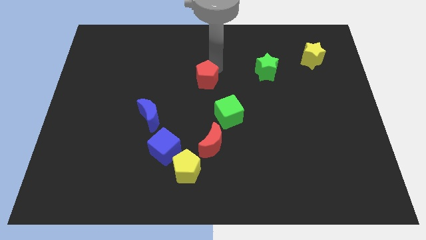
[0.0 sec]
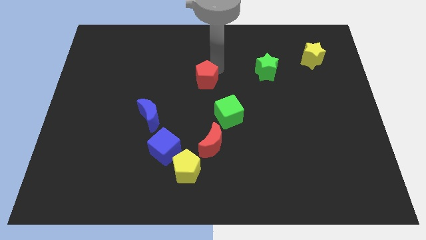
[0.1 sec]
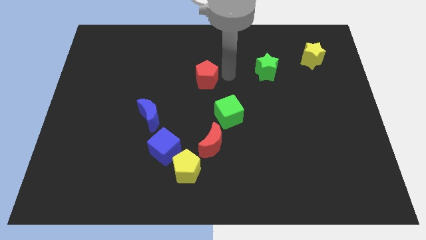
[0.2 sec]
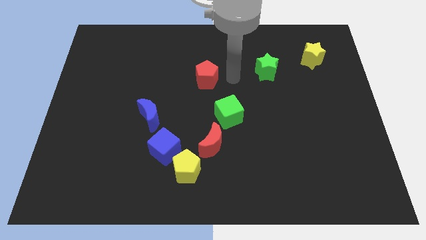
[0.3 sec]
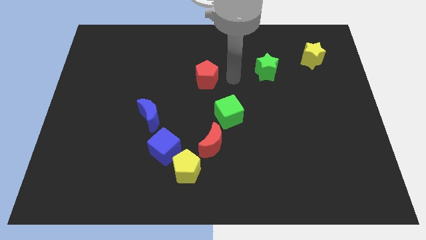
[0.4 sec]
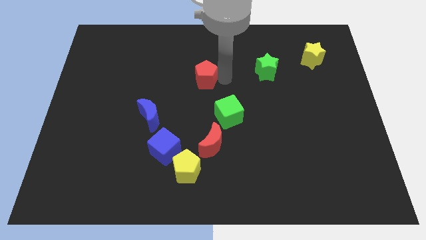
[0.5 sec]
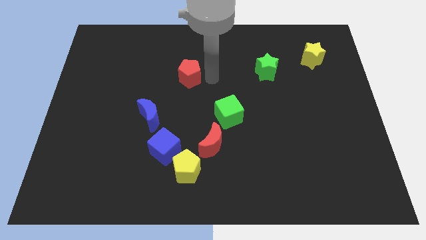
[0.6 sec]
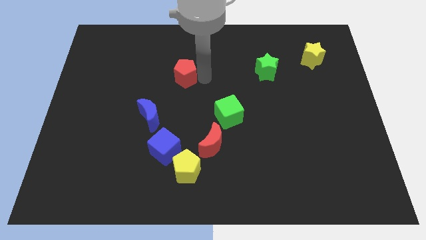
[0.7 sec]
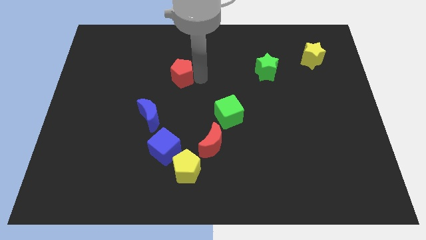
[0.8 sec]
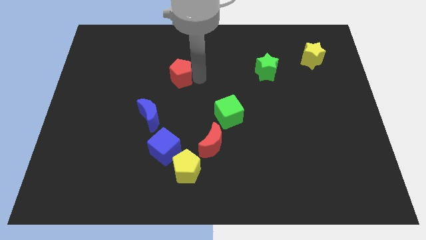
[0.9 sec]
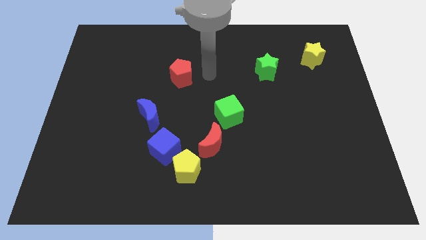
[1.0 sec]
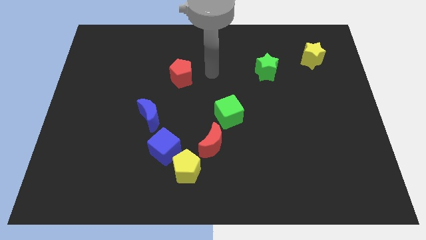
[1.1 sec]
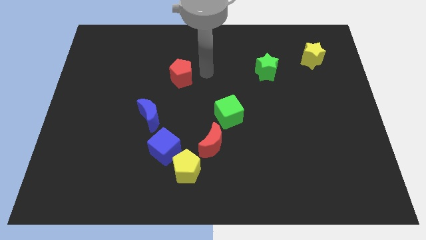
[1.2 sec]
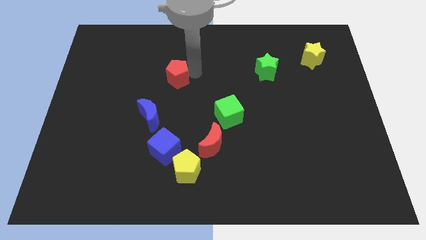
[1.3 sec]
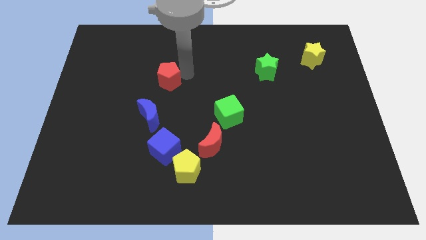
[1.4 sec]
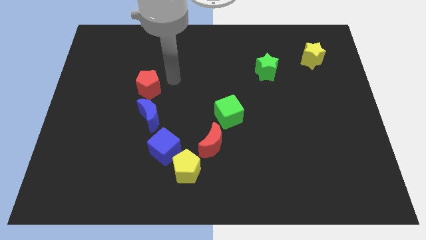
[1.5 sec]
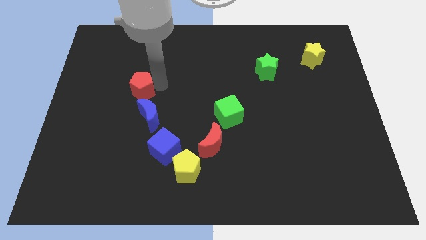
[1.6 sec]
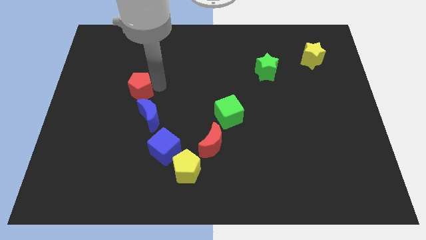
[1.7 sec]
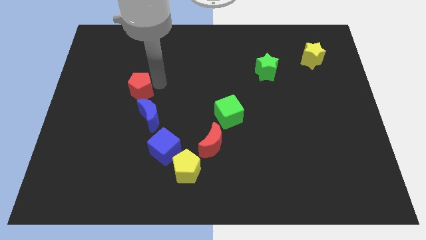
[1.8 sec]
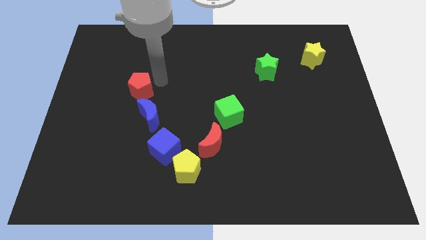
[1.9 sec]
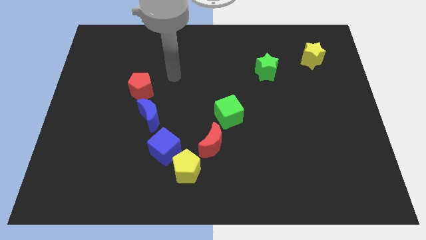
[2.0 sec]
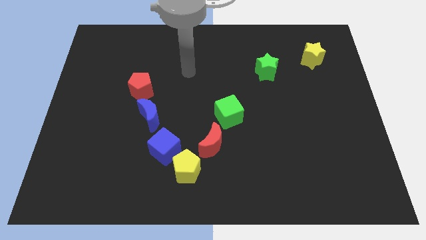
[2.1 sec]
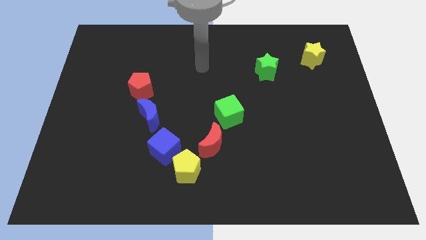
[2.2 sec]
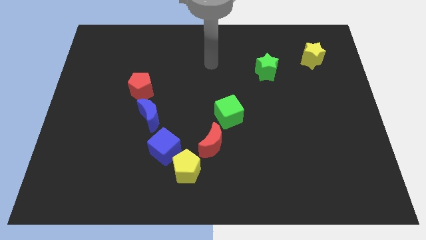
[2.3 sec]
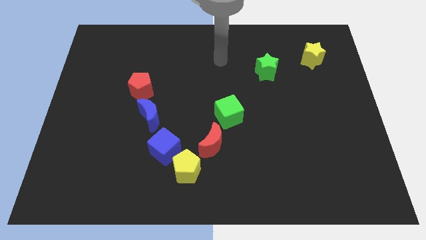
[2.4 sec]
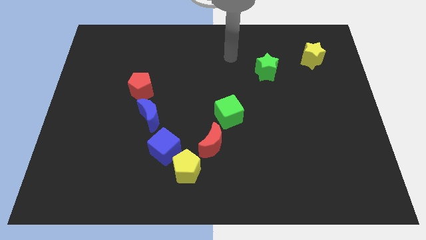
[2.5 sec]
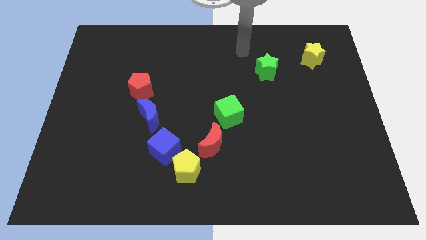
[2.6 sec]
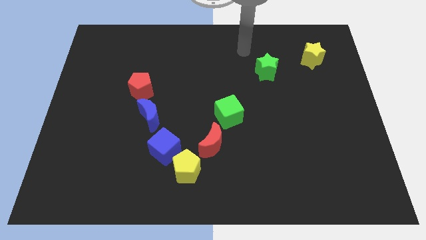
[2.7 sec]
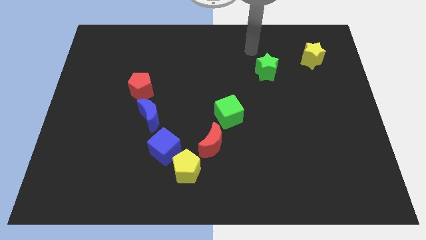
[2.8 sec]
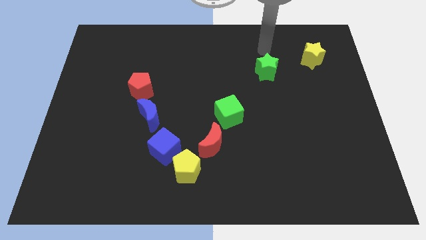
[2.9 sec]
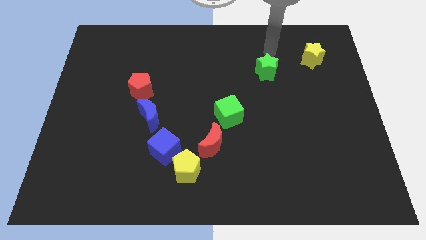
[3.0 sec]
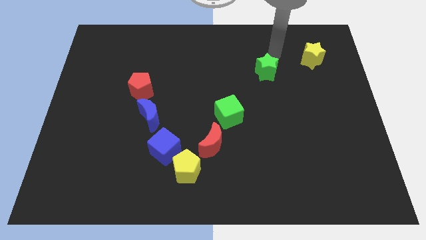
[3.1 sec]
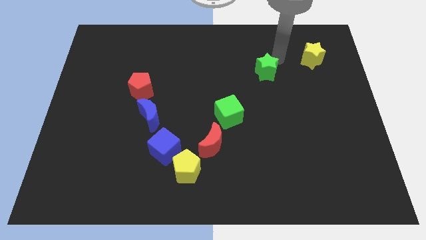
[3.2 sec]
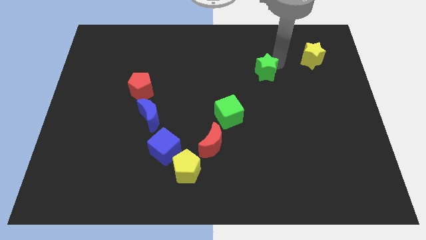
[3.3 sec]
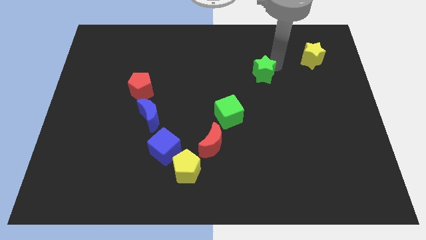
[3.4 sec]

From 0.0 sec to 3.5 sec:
move the red pentagon diagonally to the blue moon

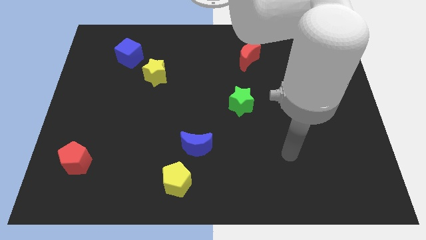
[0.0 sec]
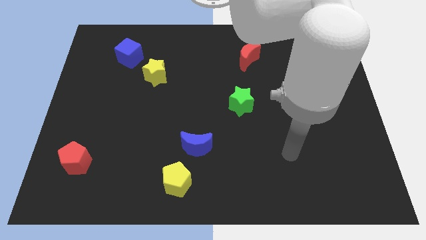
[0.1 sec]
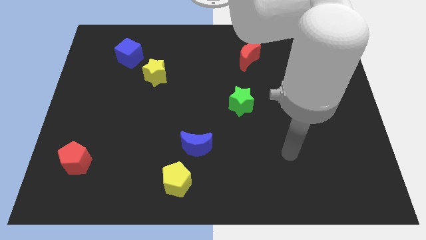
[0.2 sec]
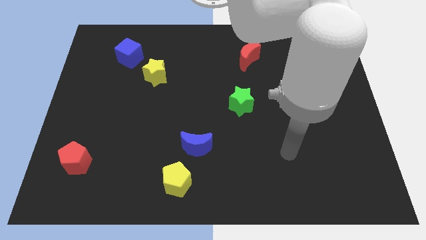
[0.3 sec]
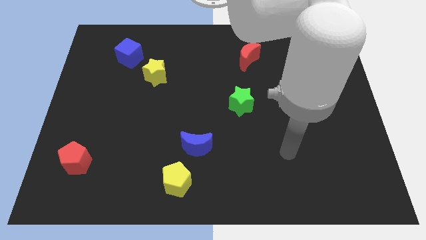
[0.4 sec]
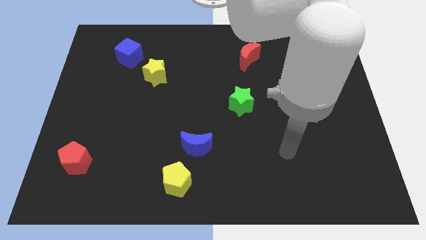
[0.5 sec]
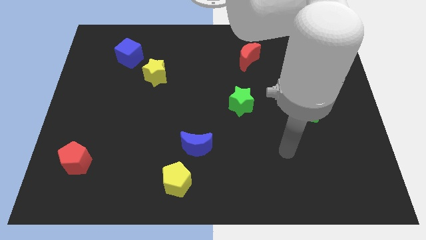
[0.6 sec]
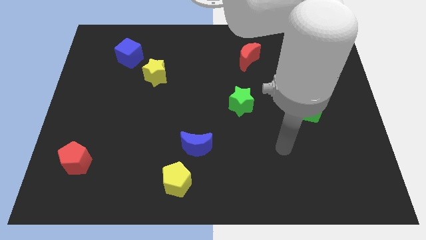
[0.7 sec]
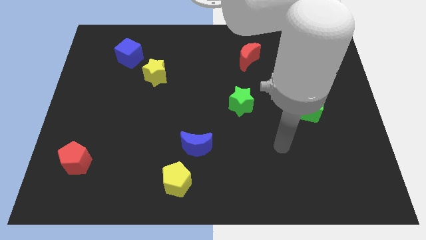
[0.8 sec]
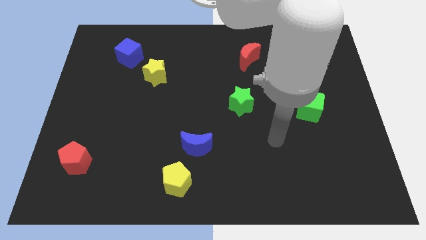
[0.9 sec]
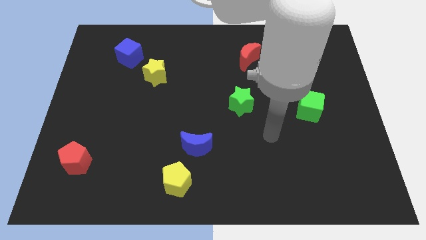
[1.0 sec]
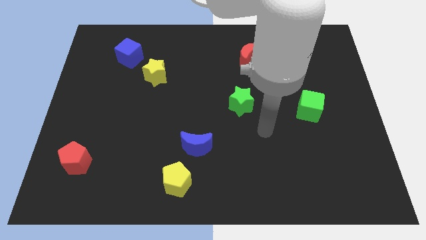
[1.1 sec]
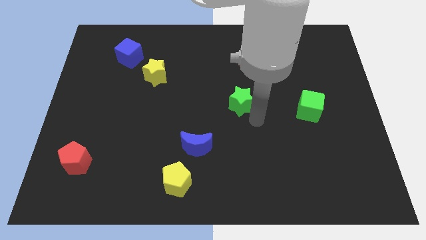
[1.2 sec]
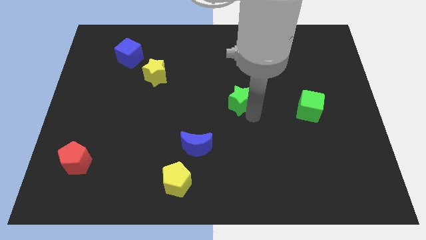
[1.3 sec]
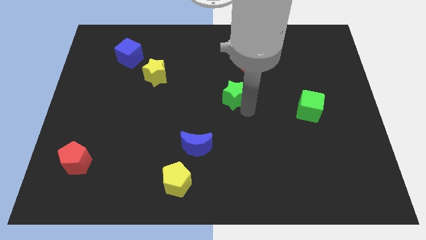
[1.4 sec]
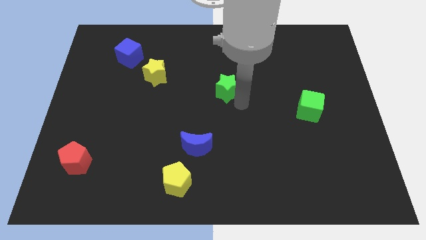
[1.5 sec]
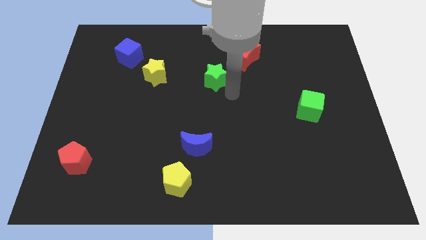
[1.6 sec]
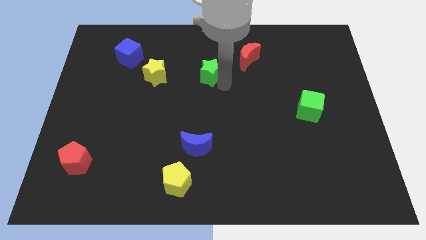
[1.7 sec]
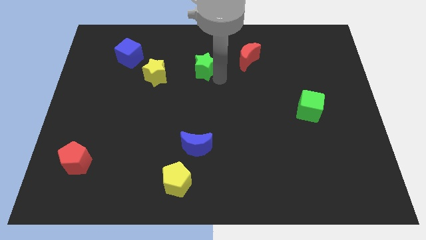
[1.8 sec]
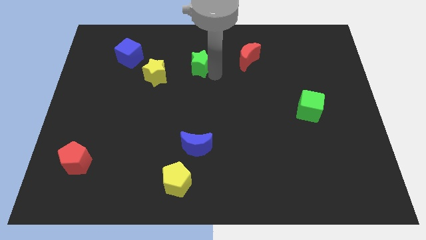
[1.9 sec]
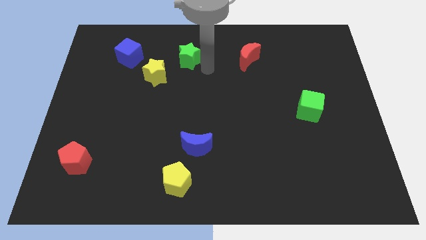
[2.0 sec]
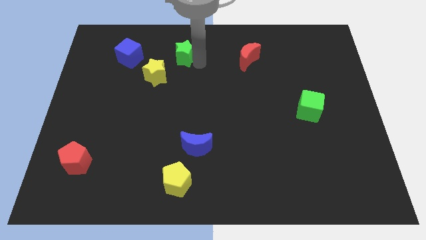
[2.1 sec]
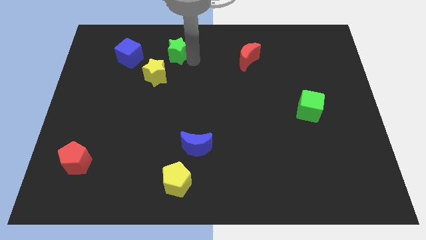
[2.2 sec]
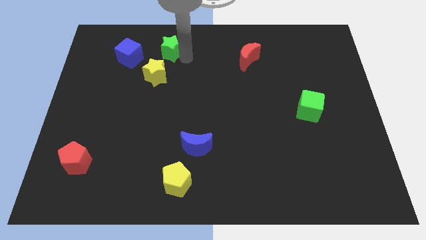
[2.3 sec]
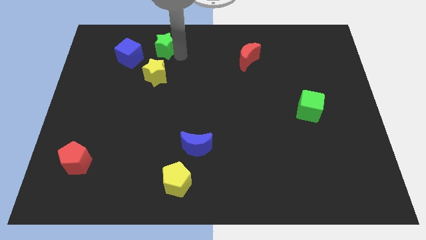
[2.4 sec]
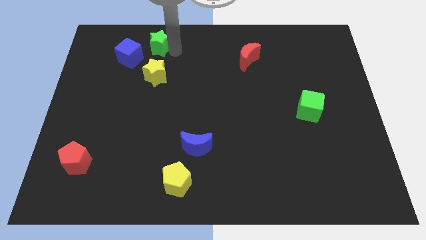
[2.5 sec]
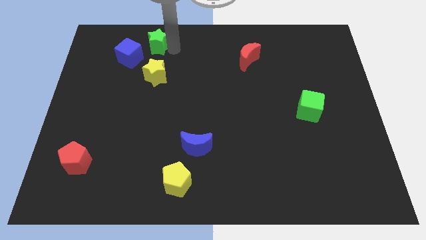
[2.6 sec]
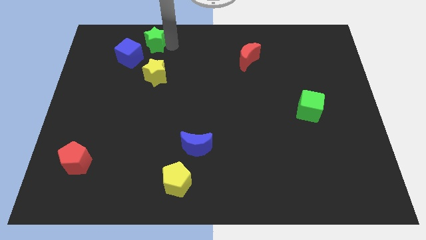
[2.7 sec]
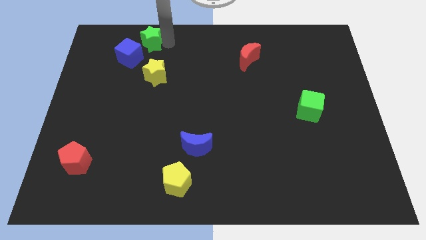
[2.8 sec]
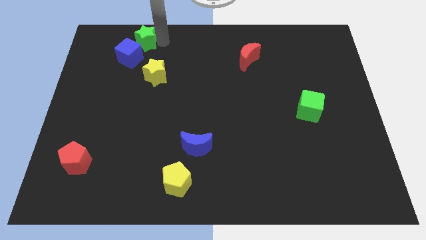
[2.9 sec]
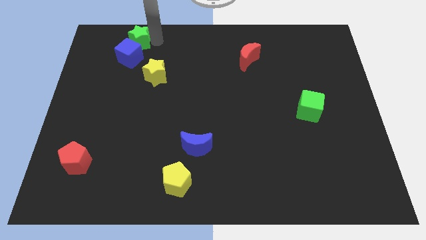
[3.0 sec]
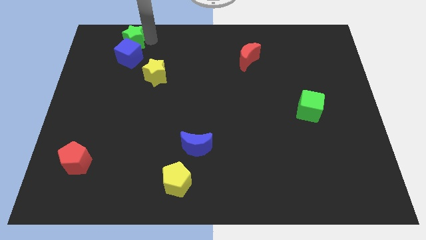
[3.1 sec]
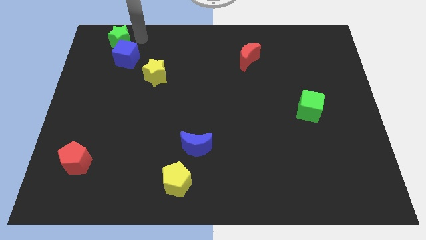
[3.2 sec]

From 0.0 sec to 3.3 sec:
push the green star into the blue cube

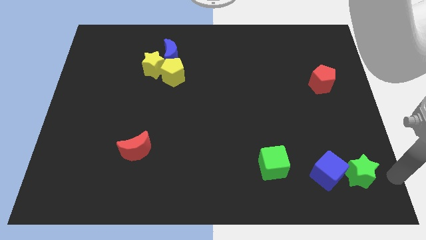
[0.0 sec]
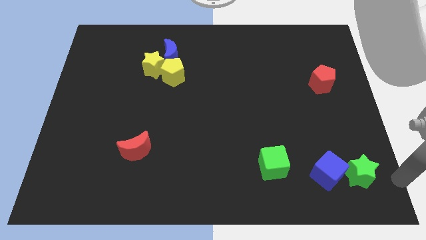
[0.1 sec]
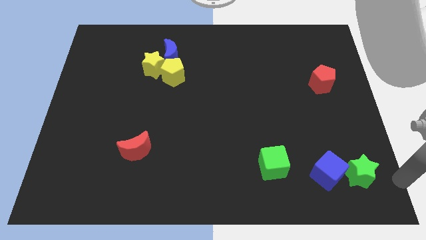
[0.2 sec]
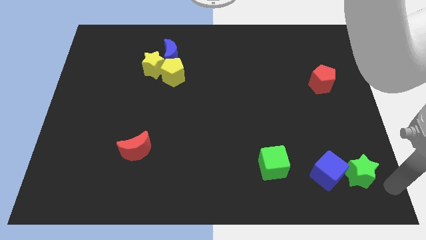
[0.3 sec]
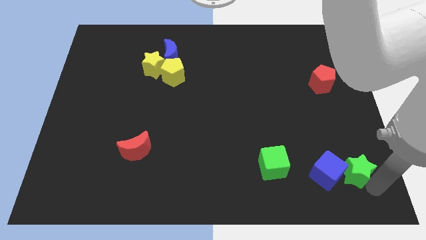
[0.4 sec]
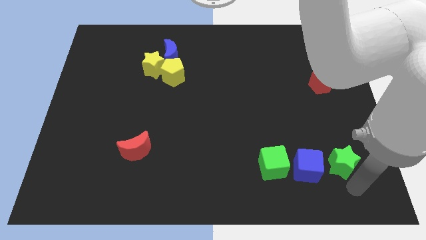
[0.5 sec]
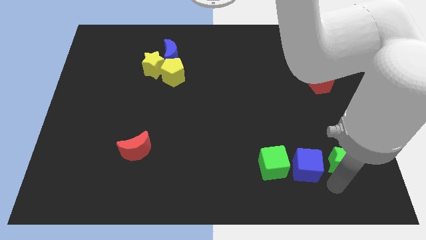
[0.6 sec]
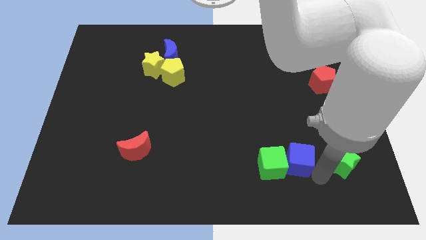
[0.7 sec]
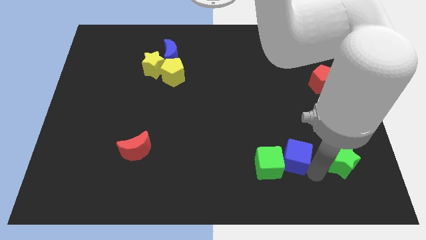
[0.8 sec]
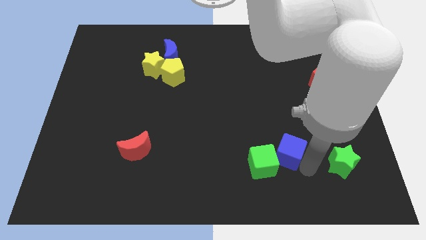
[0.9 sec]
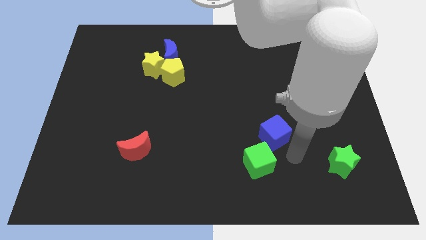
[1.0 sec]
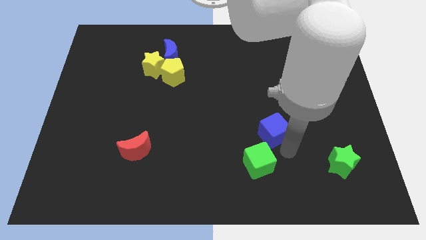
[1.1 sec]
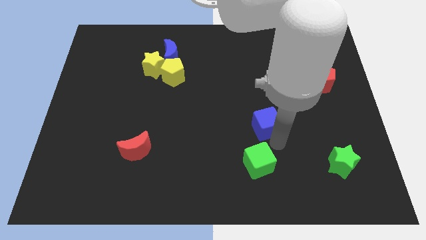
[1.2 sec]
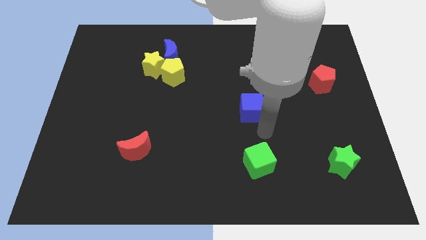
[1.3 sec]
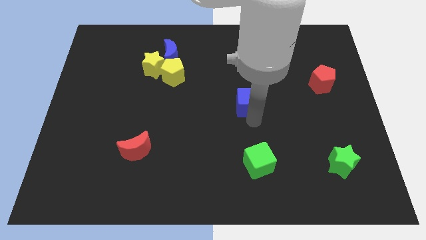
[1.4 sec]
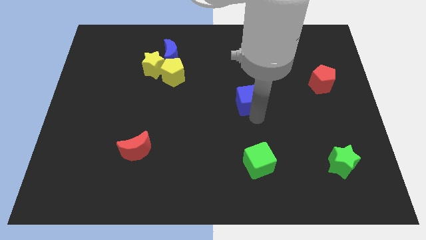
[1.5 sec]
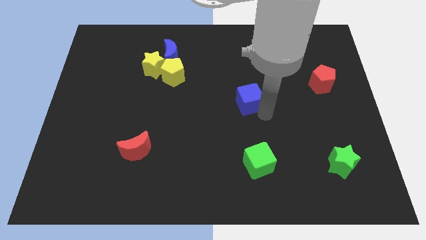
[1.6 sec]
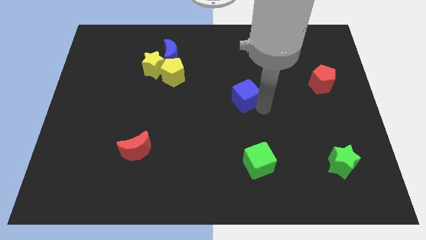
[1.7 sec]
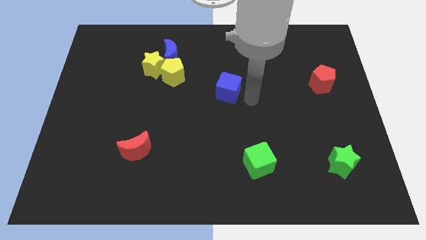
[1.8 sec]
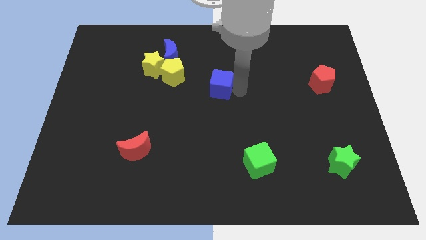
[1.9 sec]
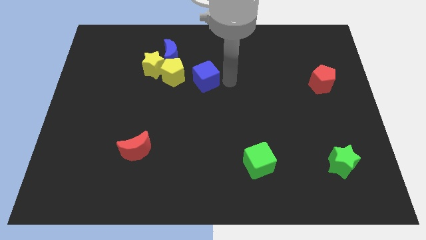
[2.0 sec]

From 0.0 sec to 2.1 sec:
place the blue cube parallel right to the yellow pentagon
